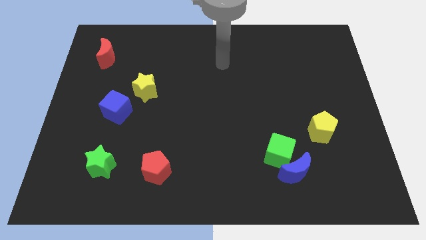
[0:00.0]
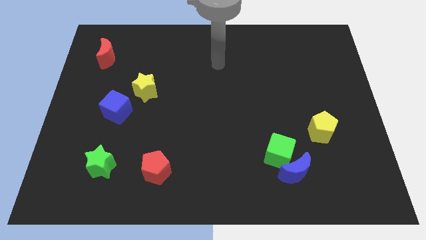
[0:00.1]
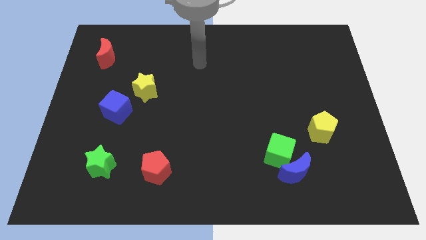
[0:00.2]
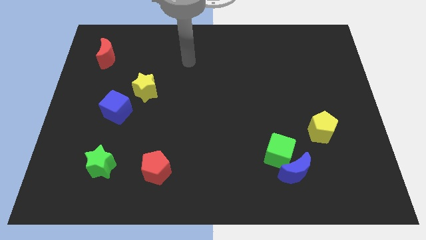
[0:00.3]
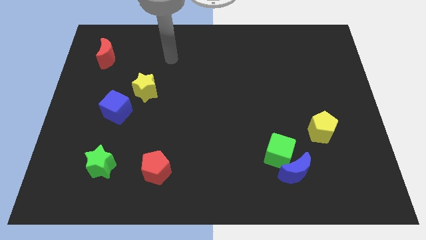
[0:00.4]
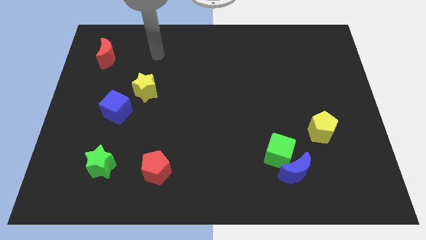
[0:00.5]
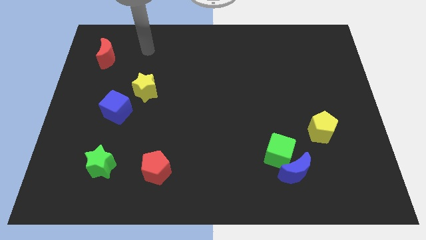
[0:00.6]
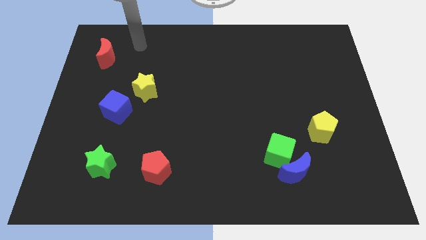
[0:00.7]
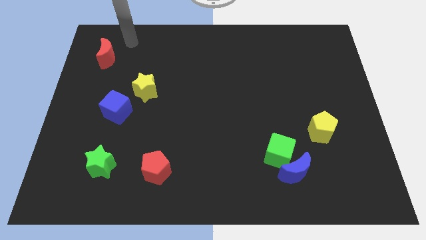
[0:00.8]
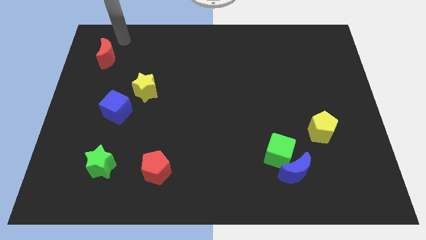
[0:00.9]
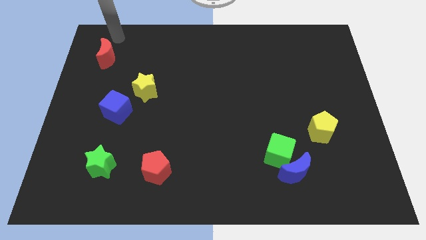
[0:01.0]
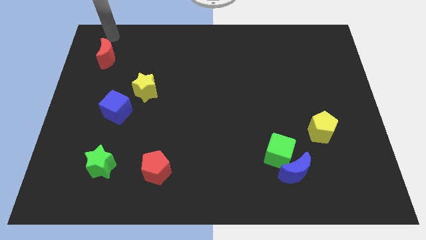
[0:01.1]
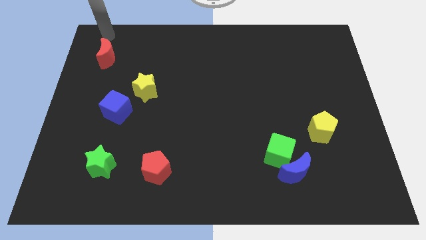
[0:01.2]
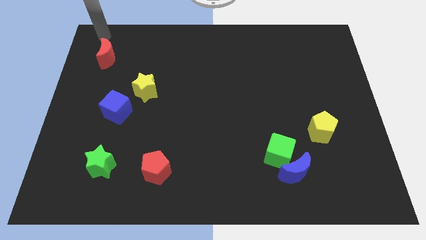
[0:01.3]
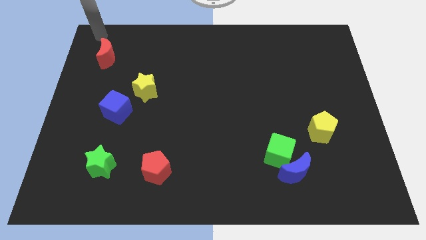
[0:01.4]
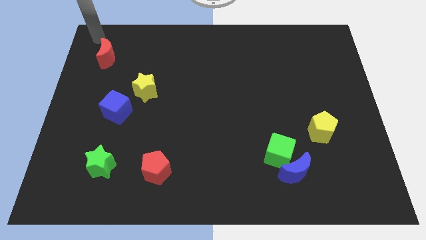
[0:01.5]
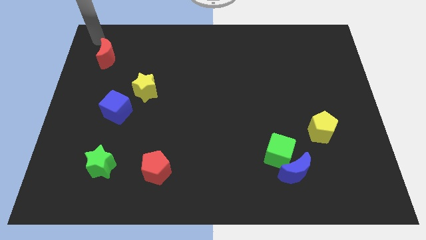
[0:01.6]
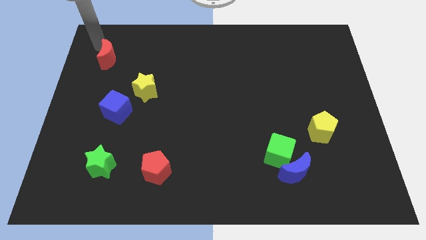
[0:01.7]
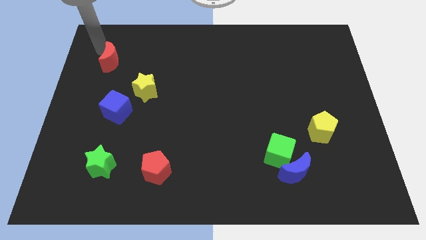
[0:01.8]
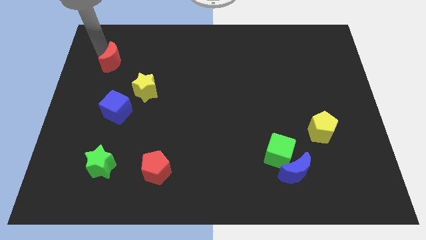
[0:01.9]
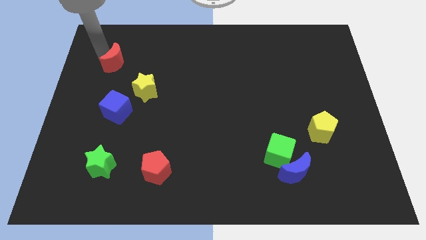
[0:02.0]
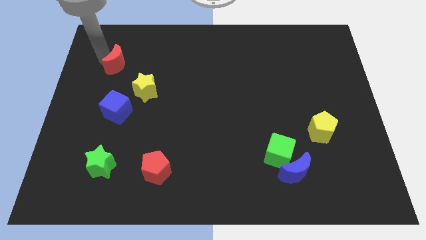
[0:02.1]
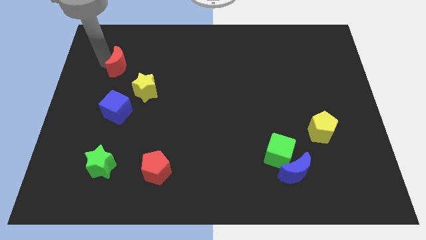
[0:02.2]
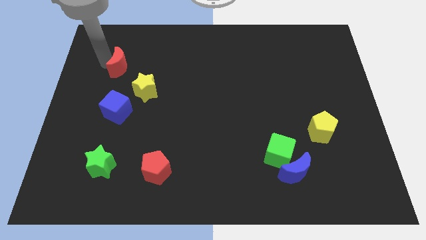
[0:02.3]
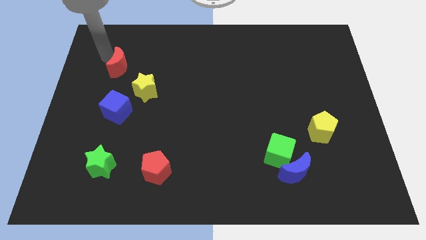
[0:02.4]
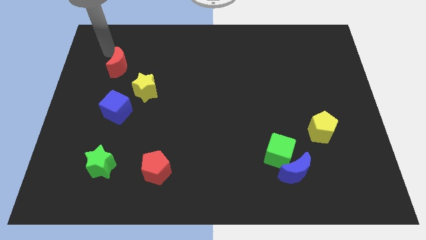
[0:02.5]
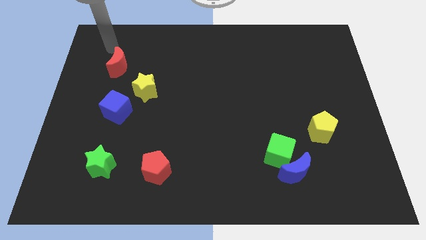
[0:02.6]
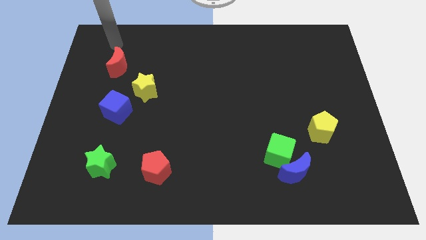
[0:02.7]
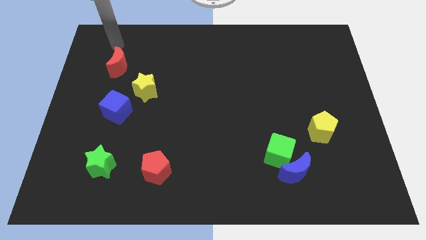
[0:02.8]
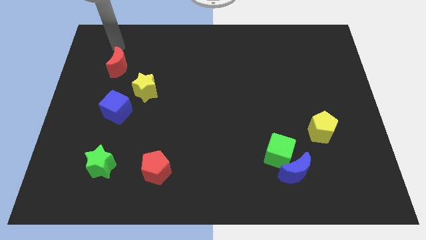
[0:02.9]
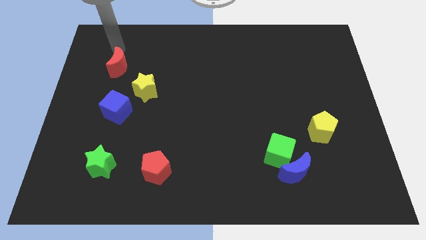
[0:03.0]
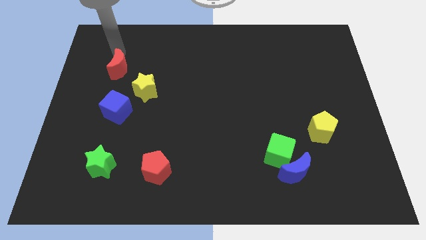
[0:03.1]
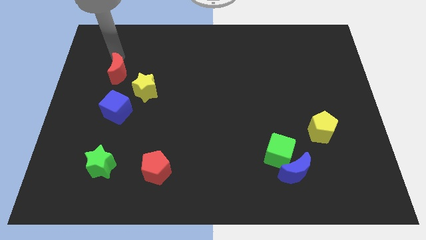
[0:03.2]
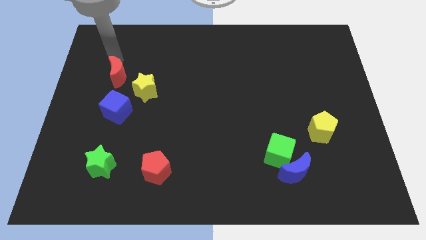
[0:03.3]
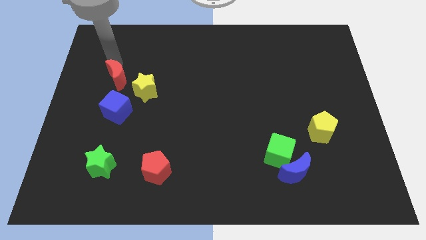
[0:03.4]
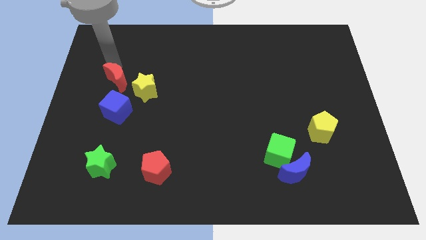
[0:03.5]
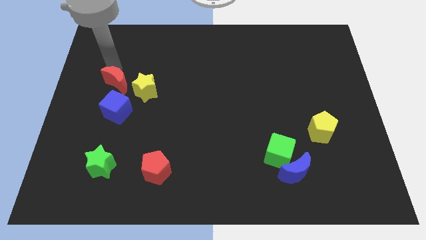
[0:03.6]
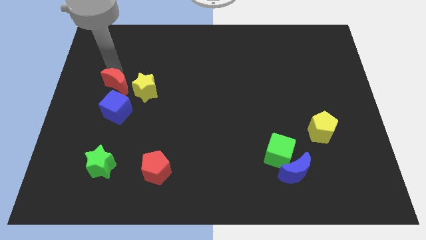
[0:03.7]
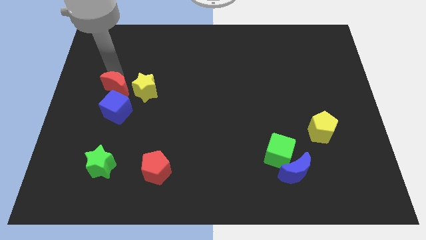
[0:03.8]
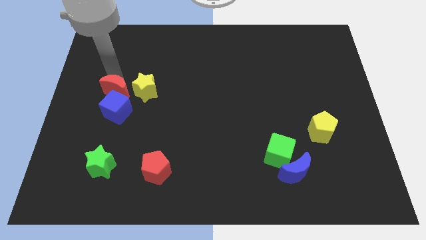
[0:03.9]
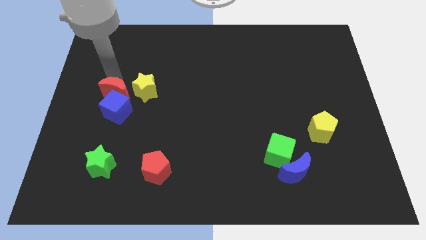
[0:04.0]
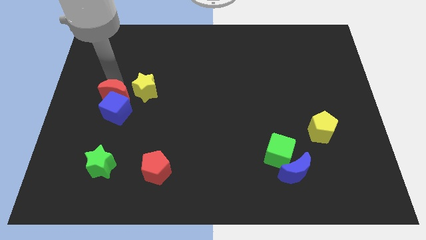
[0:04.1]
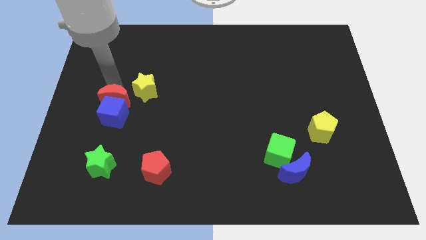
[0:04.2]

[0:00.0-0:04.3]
push the red moon next to the blue cube

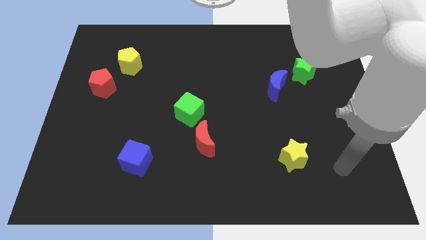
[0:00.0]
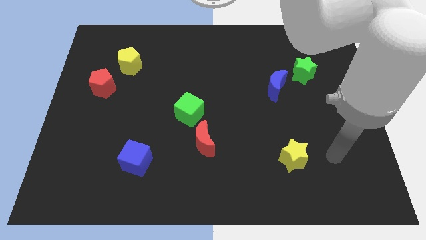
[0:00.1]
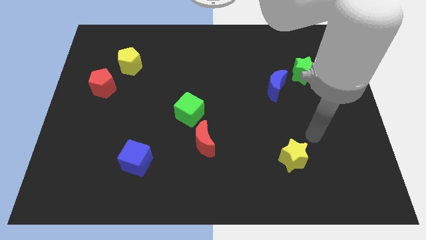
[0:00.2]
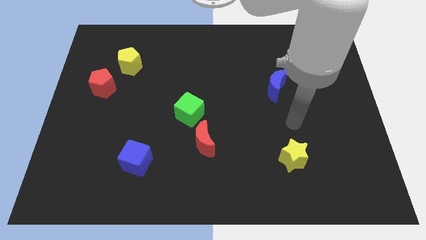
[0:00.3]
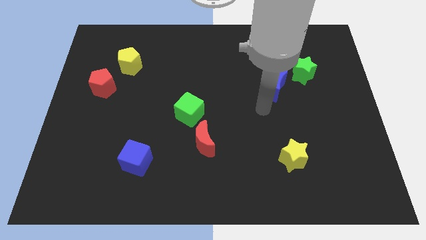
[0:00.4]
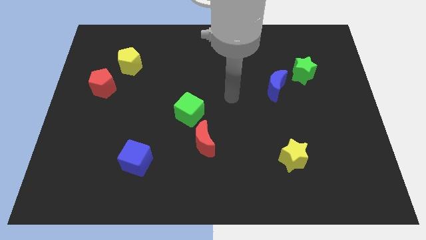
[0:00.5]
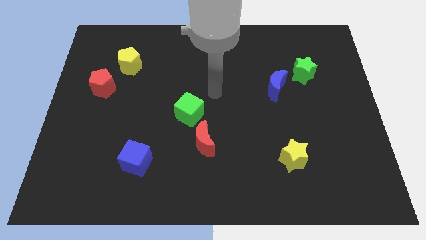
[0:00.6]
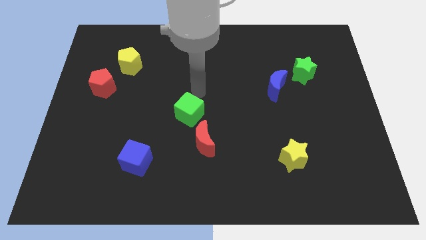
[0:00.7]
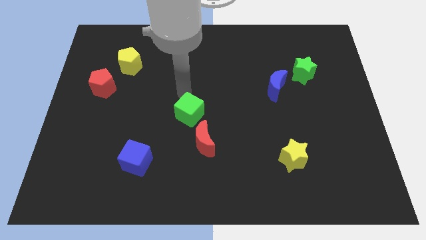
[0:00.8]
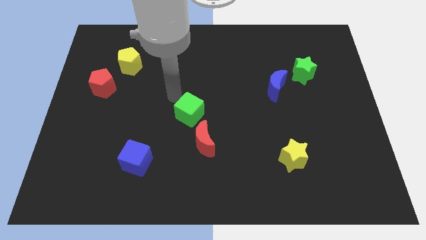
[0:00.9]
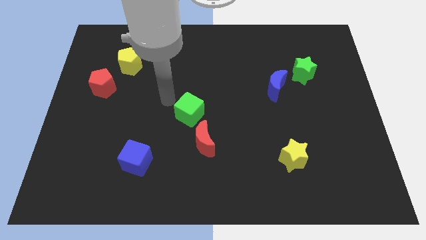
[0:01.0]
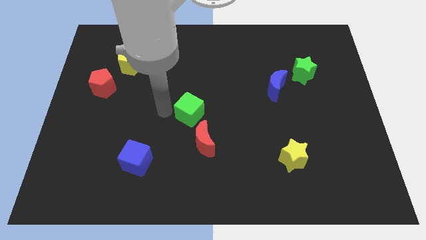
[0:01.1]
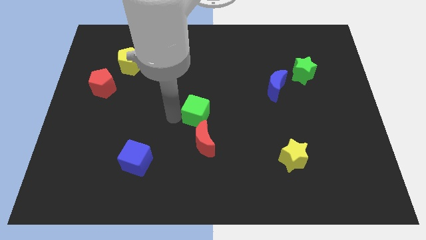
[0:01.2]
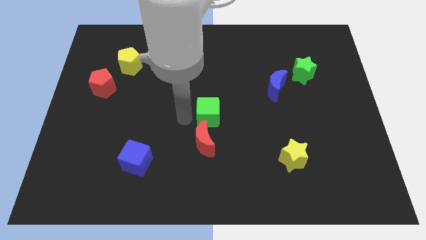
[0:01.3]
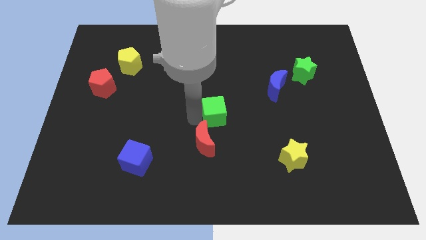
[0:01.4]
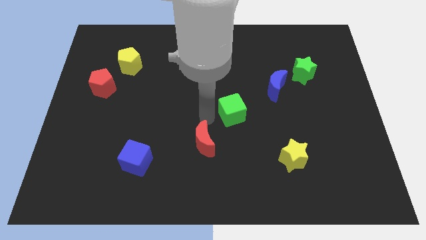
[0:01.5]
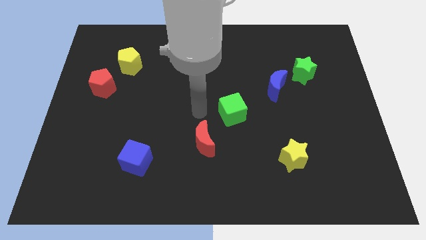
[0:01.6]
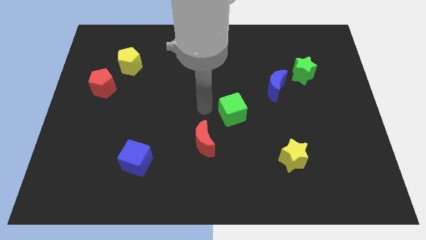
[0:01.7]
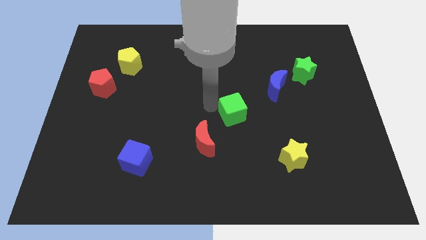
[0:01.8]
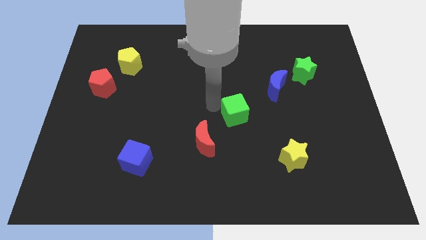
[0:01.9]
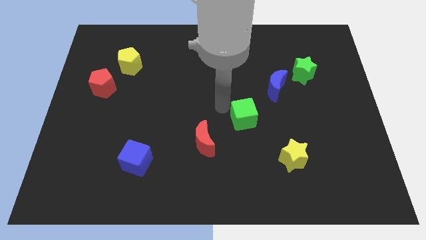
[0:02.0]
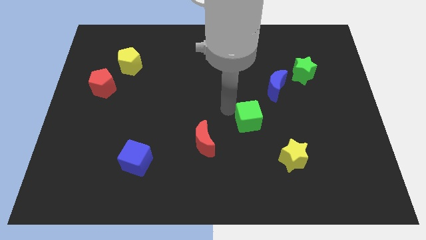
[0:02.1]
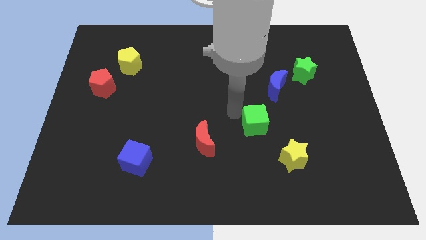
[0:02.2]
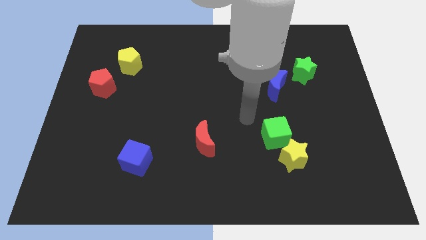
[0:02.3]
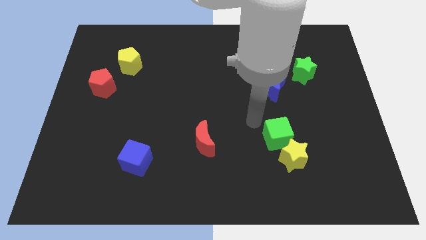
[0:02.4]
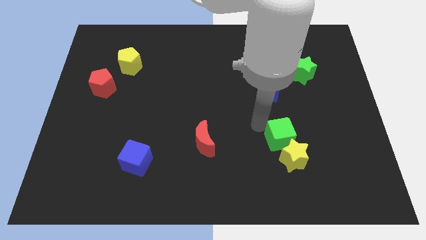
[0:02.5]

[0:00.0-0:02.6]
push the green cube towards the yellow star

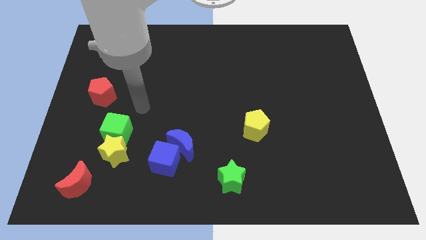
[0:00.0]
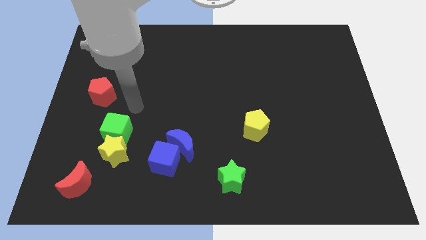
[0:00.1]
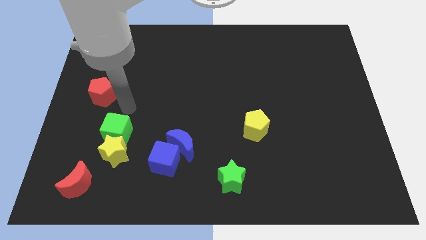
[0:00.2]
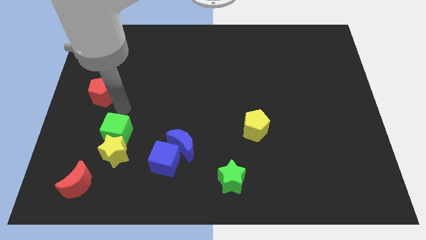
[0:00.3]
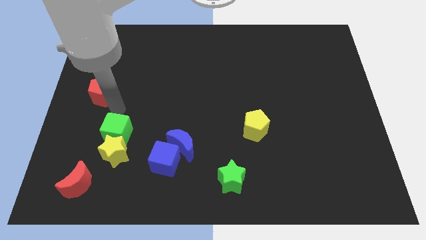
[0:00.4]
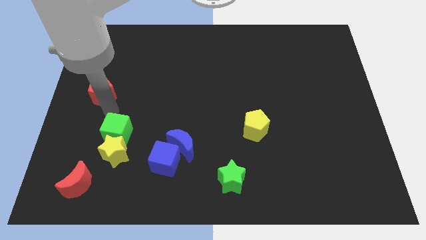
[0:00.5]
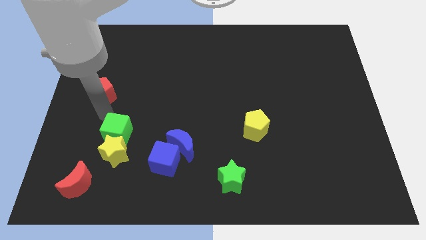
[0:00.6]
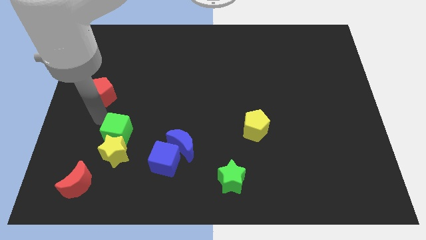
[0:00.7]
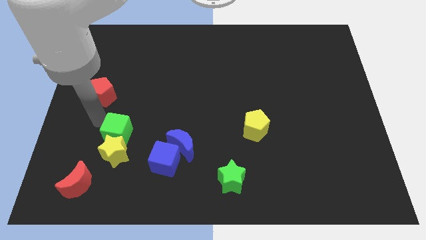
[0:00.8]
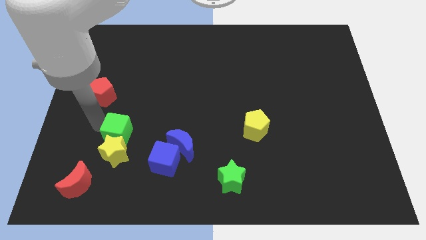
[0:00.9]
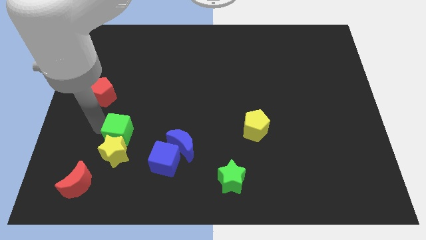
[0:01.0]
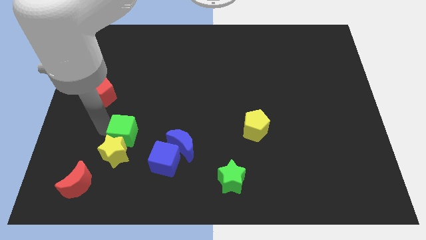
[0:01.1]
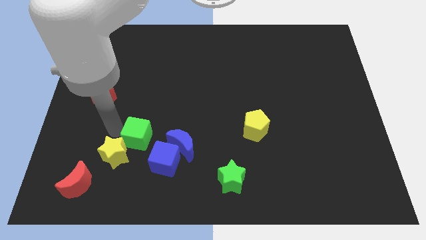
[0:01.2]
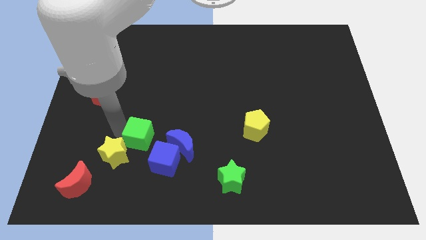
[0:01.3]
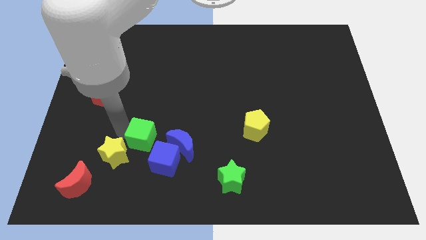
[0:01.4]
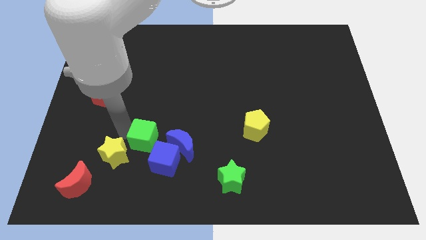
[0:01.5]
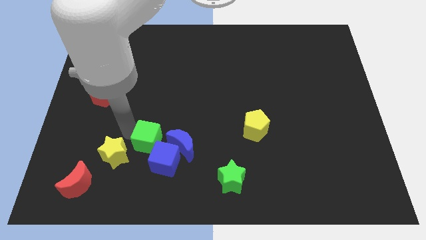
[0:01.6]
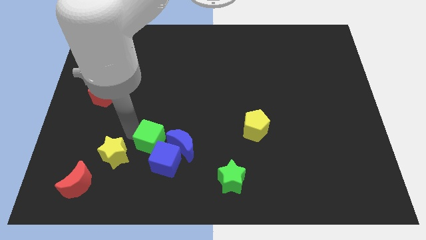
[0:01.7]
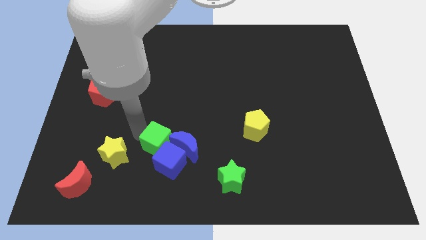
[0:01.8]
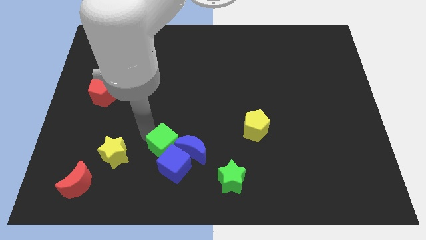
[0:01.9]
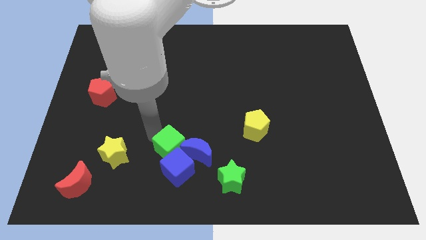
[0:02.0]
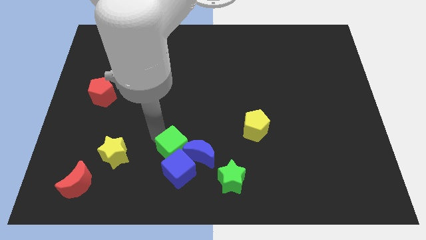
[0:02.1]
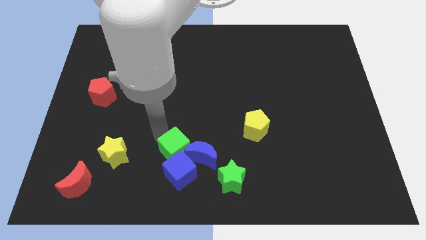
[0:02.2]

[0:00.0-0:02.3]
push the green cube close to the blue moon
